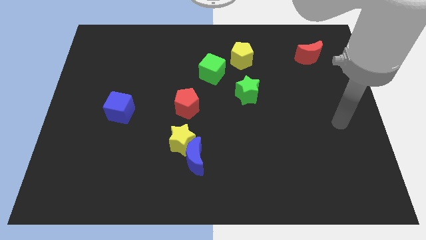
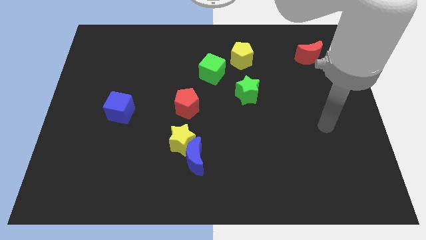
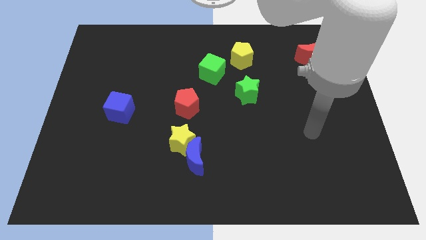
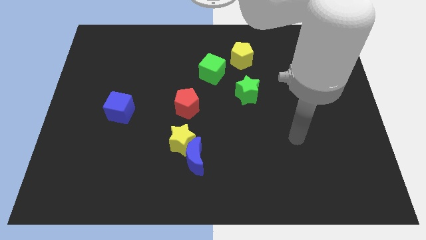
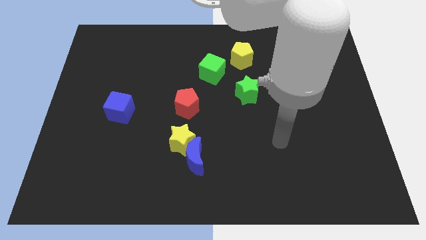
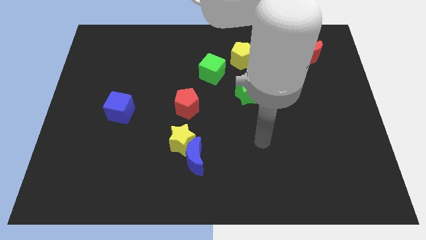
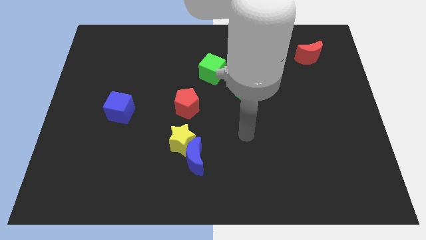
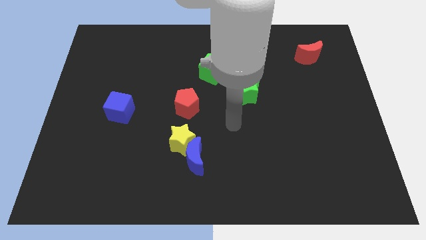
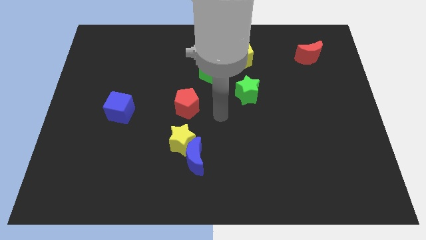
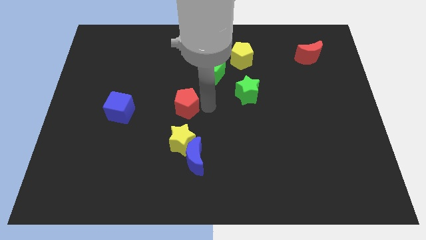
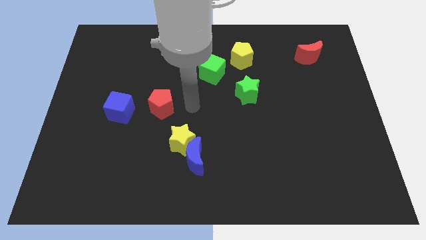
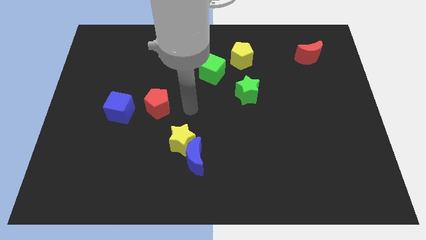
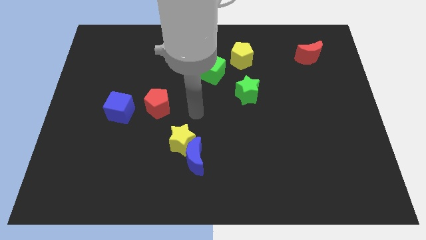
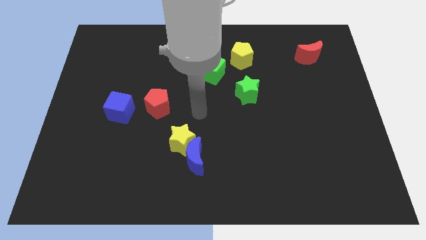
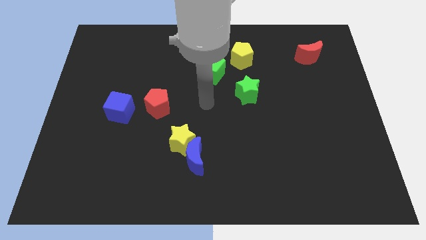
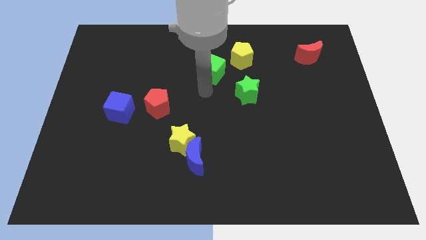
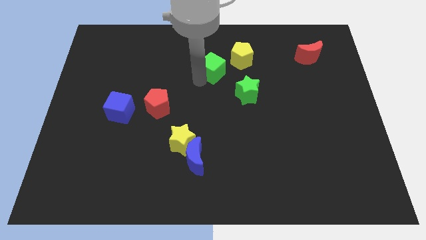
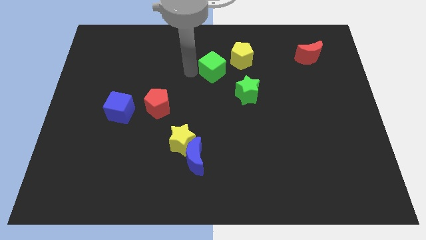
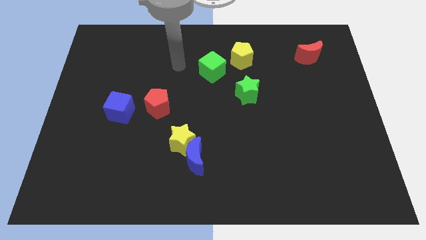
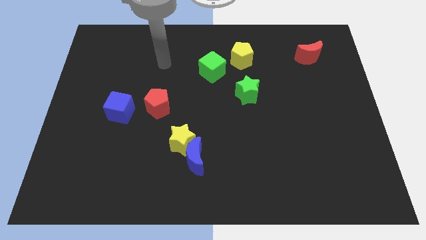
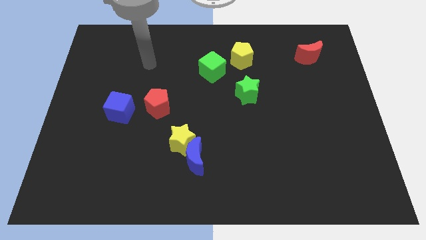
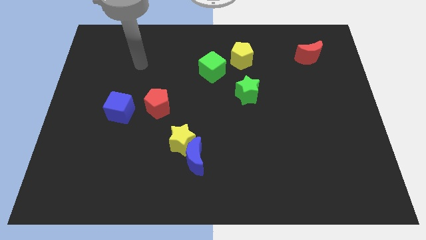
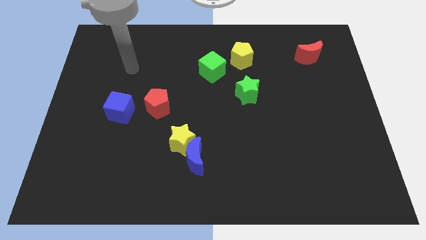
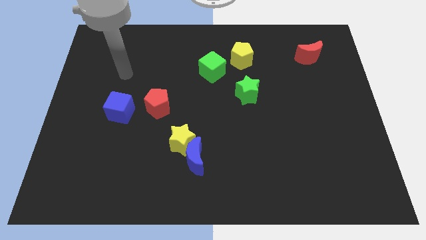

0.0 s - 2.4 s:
place red pentagon close to the blue cube

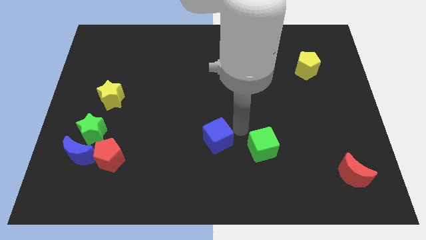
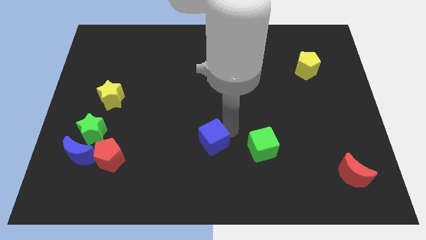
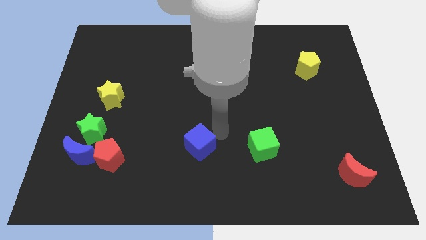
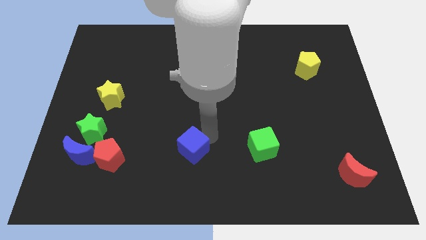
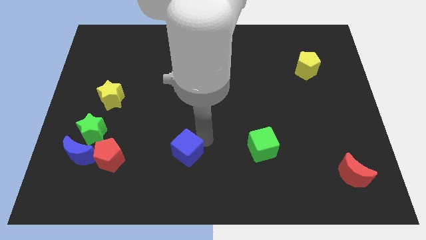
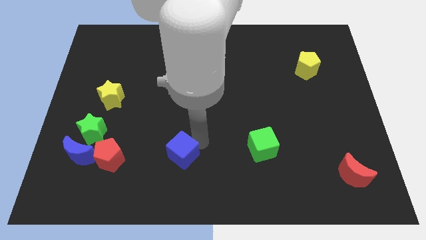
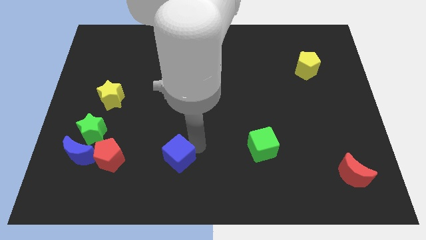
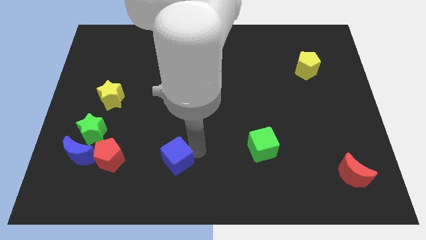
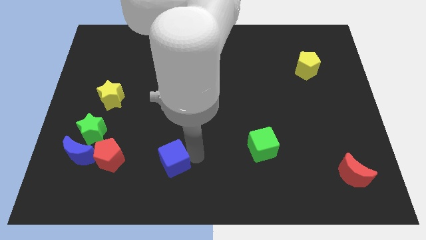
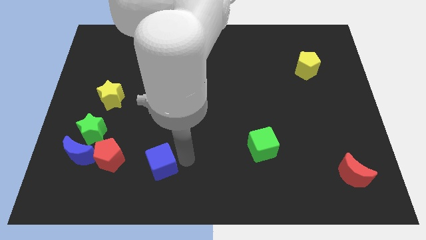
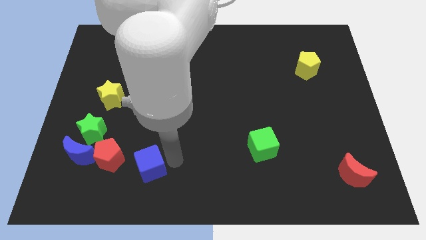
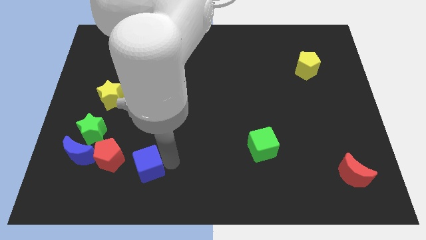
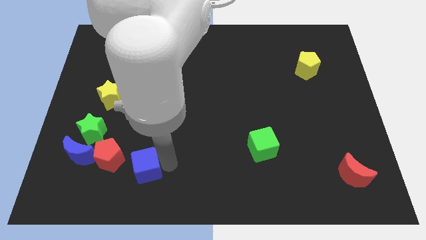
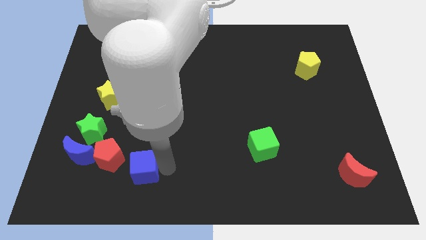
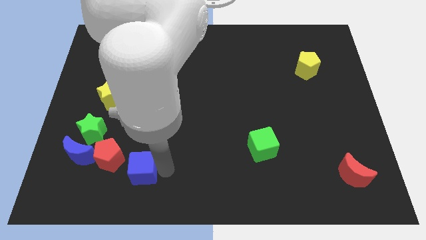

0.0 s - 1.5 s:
push the blue cube right to the red pentagon

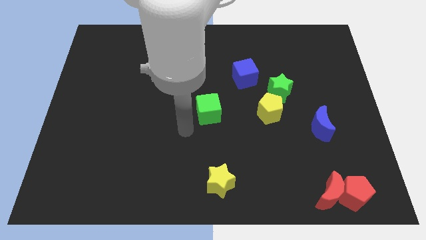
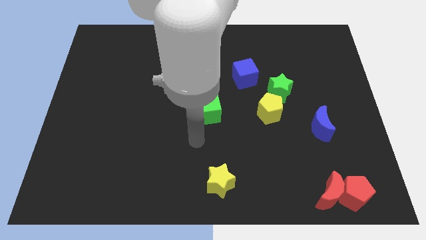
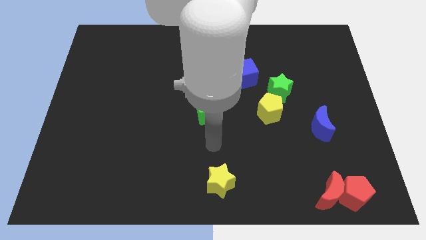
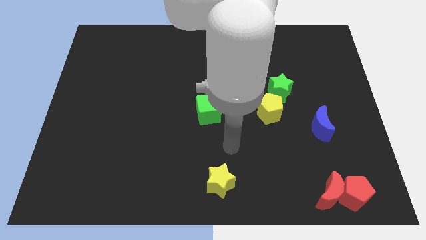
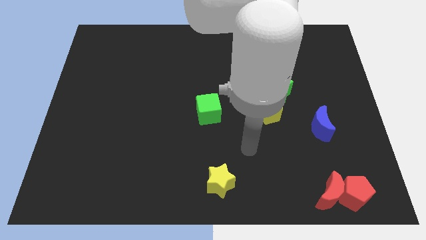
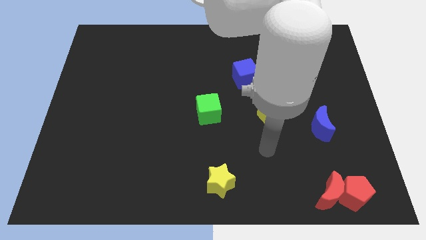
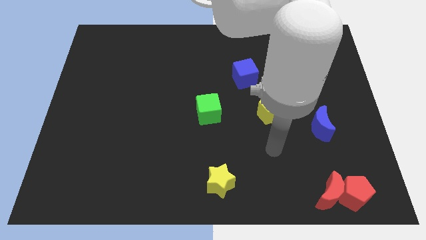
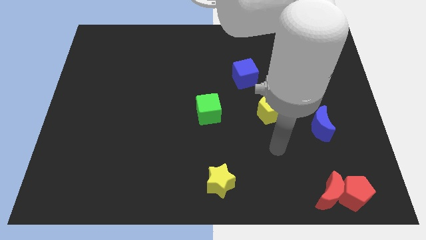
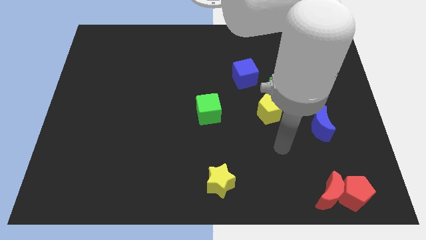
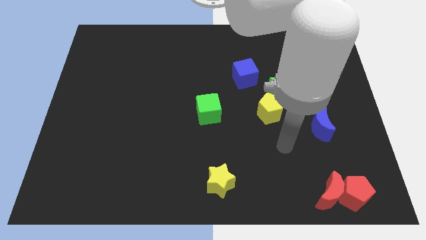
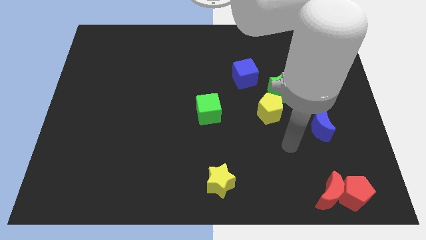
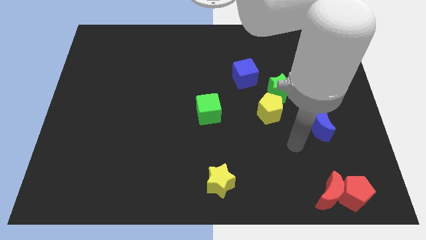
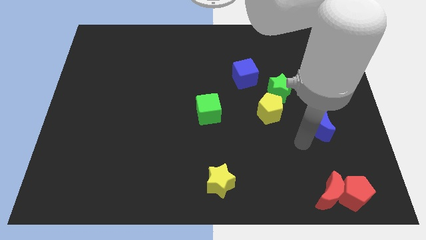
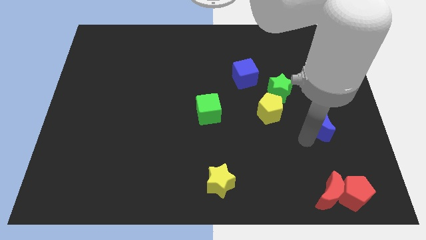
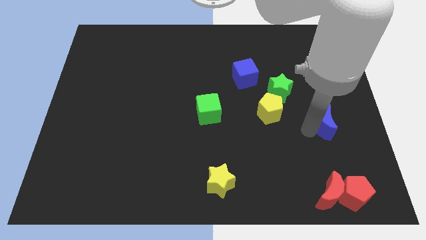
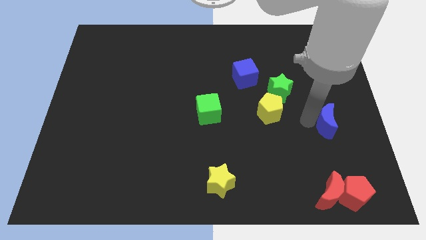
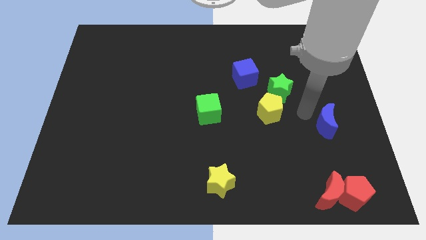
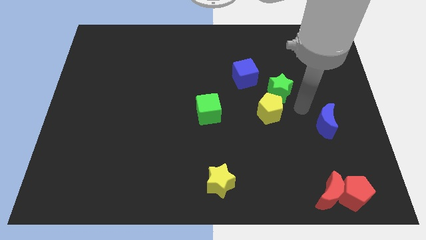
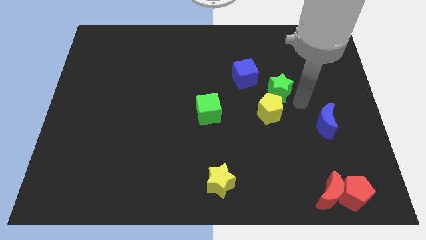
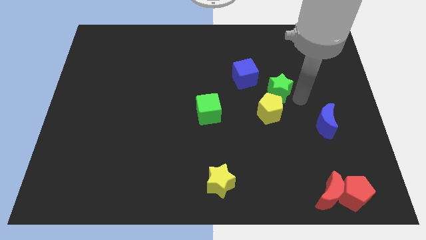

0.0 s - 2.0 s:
move your arm away from the green cube

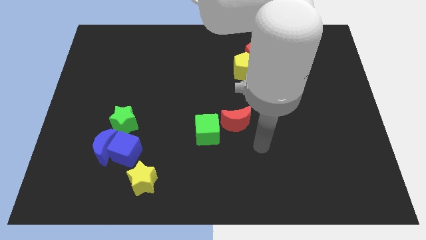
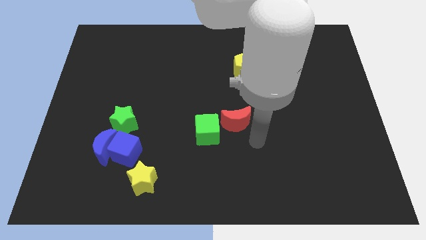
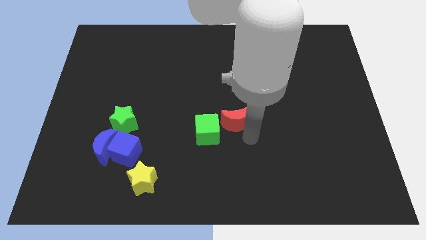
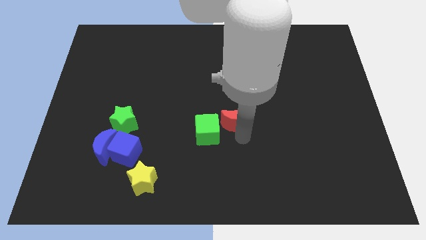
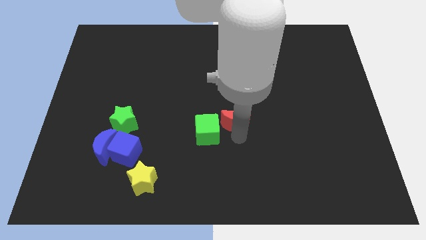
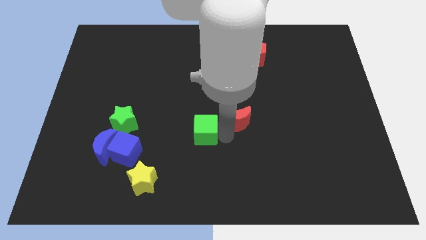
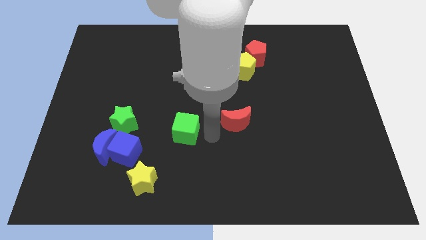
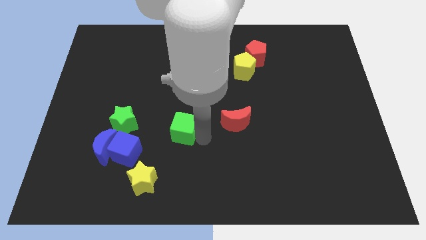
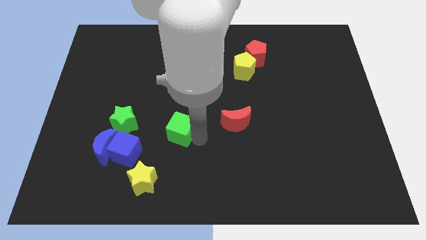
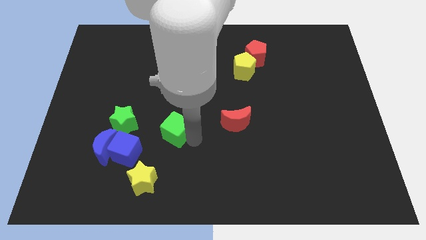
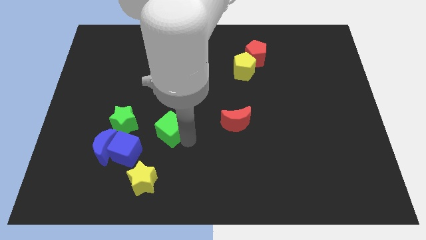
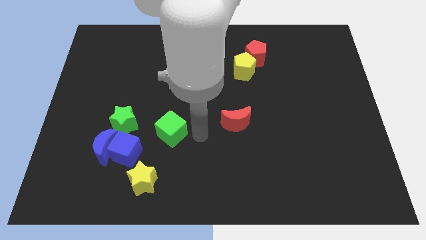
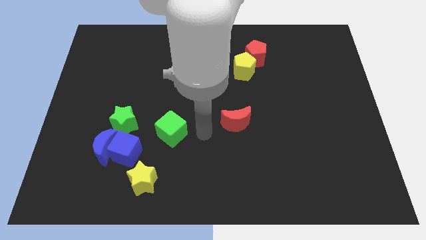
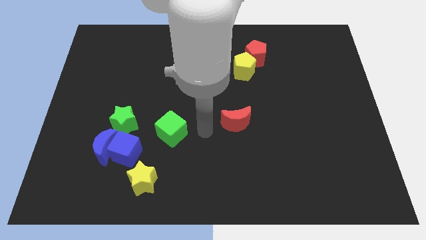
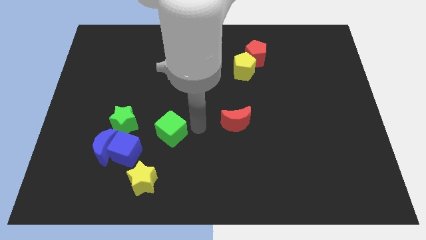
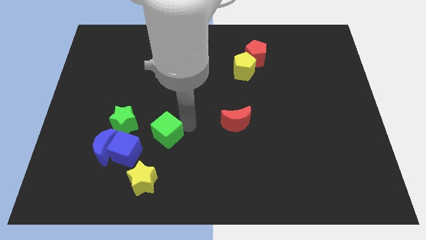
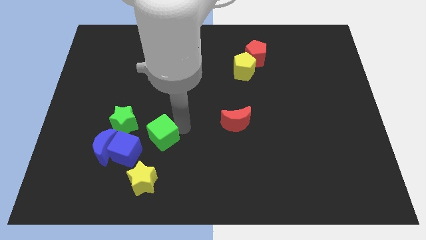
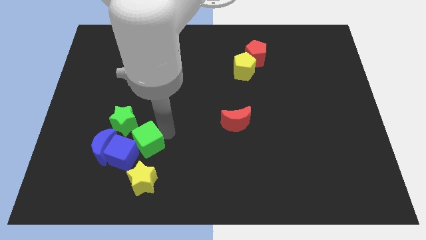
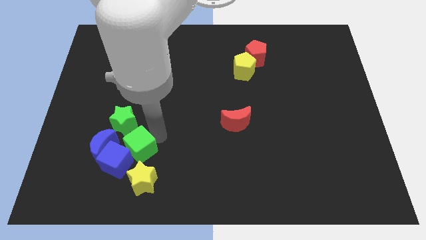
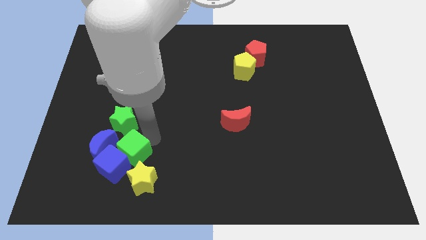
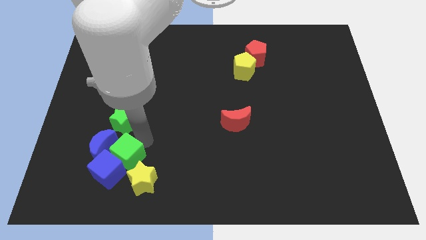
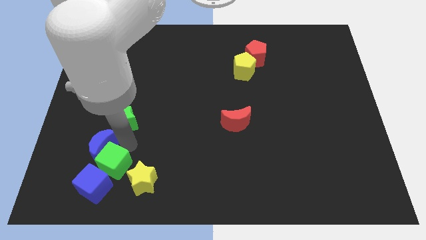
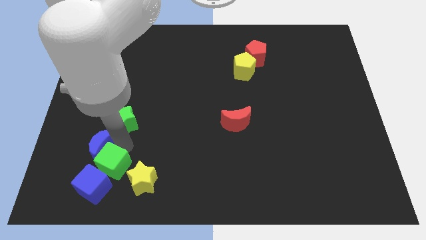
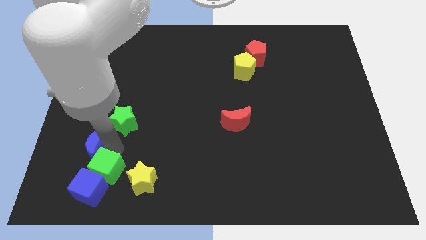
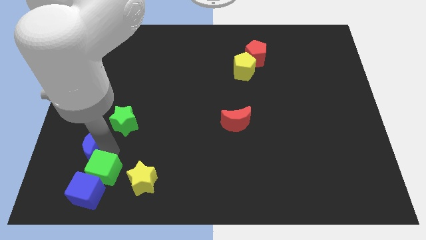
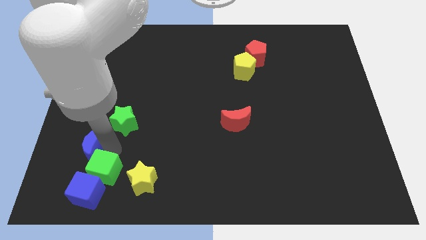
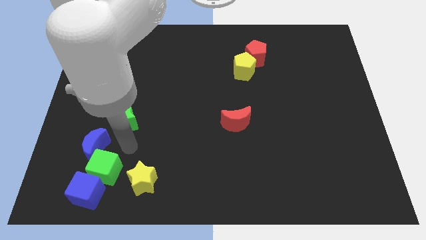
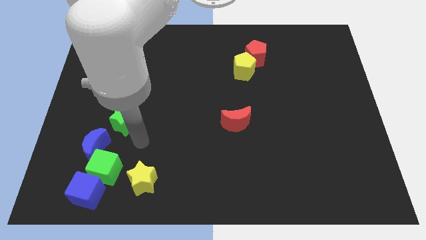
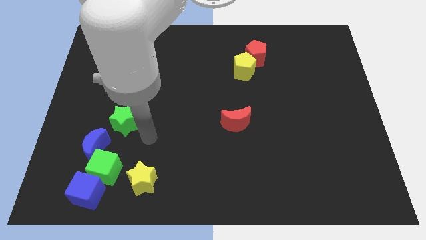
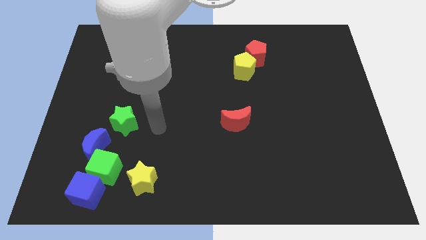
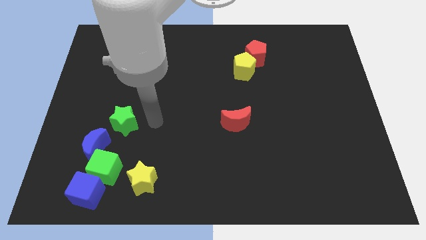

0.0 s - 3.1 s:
push the green cube into the blue cube

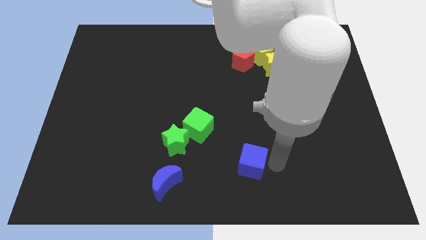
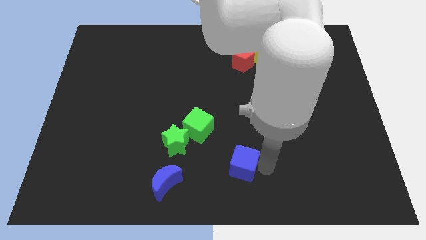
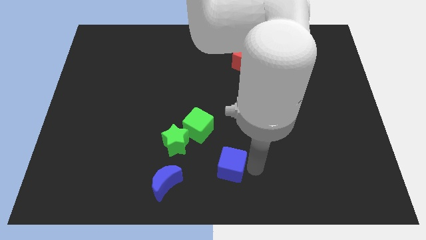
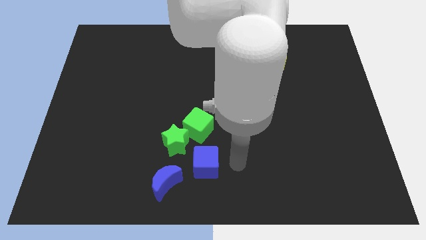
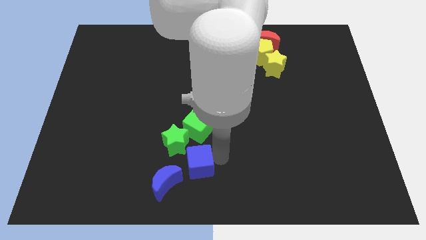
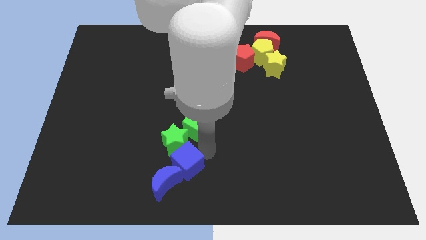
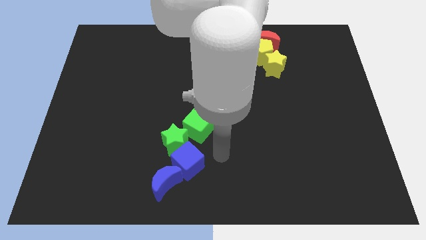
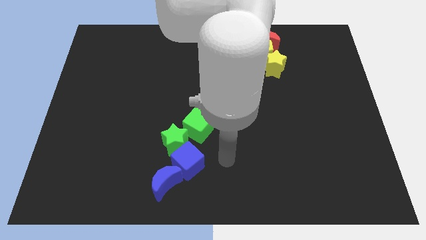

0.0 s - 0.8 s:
push blue cube towards green star
